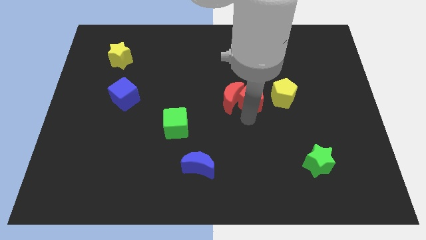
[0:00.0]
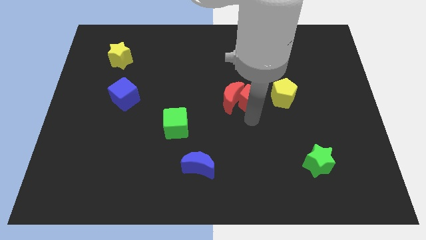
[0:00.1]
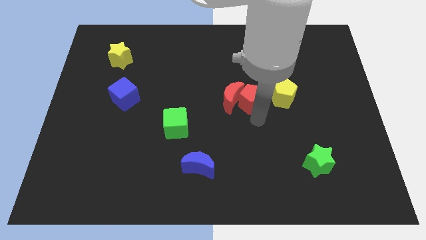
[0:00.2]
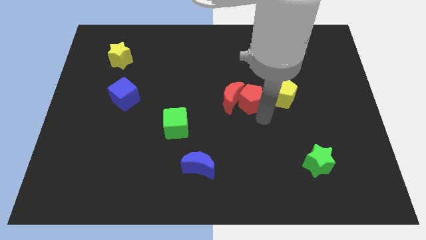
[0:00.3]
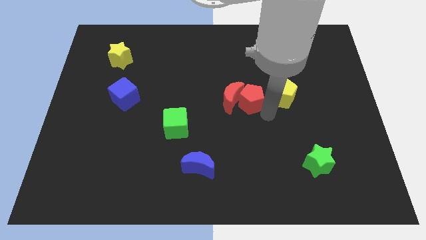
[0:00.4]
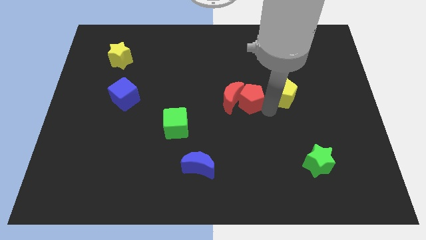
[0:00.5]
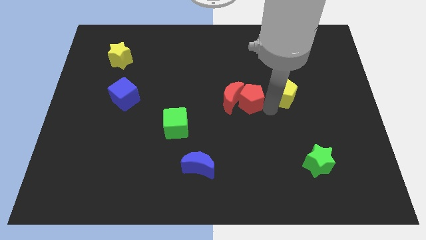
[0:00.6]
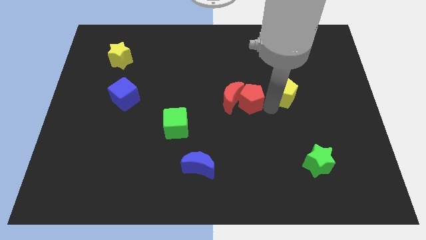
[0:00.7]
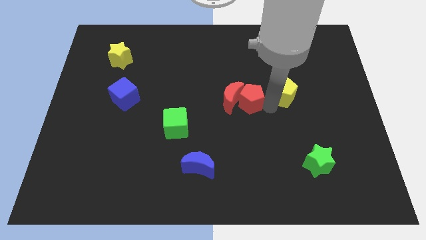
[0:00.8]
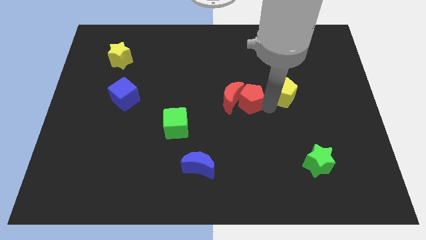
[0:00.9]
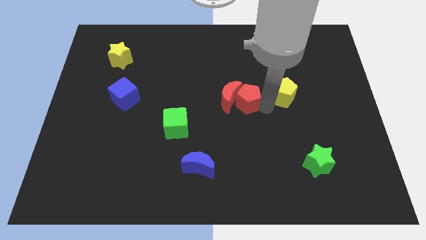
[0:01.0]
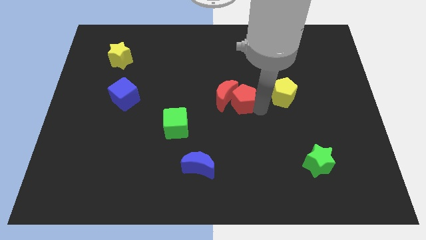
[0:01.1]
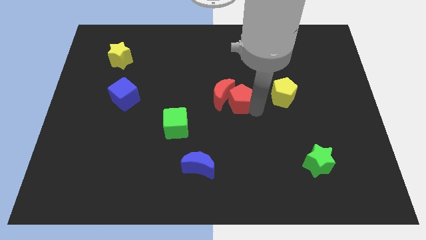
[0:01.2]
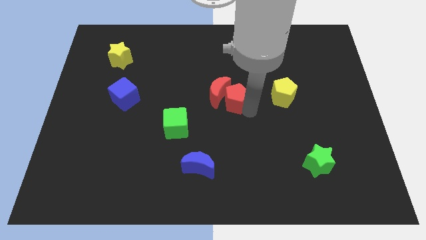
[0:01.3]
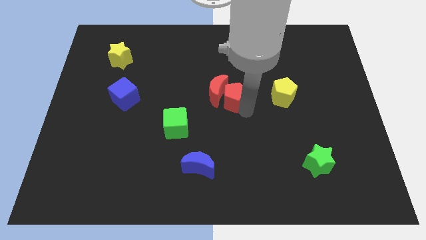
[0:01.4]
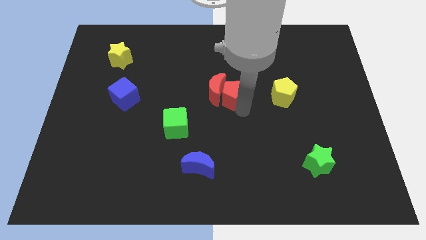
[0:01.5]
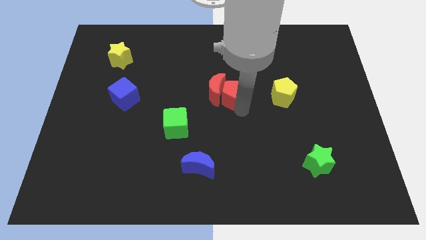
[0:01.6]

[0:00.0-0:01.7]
push red crescent with red pentagon

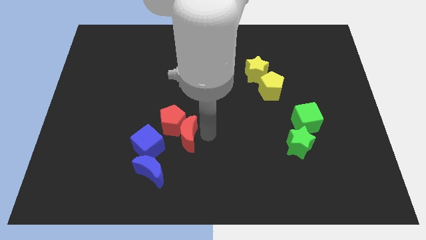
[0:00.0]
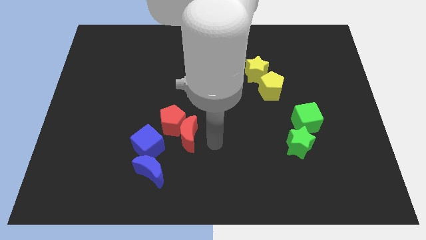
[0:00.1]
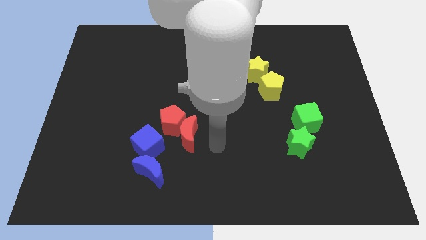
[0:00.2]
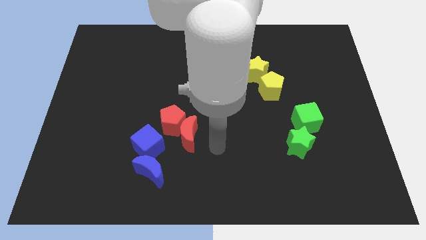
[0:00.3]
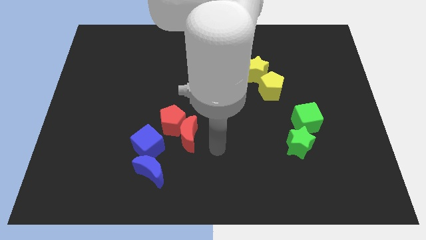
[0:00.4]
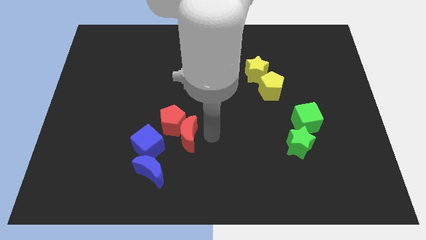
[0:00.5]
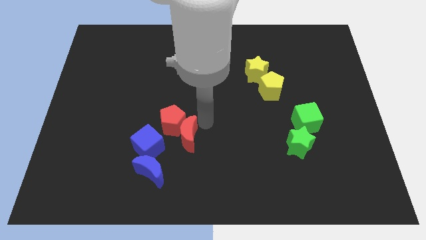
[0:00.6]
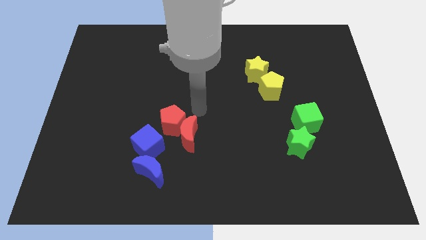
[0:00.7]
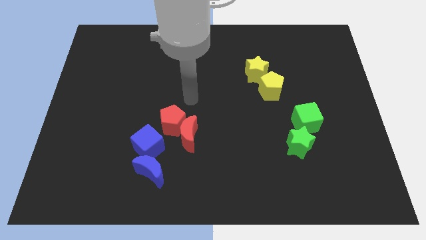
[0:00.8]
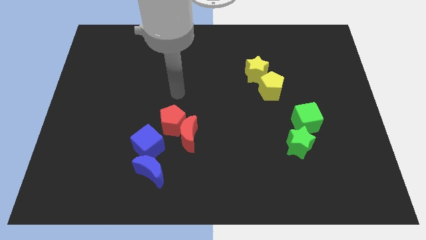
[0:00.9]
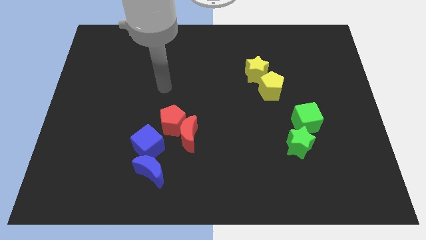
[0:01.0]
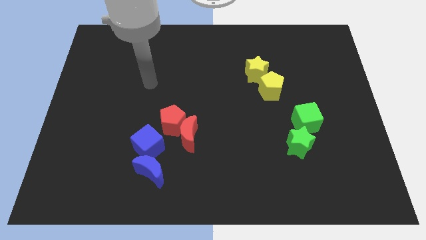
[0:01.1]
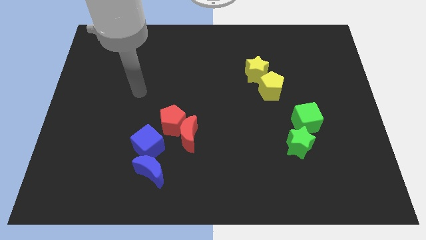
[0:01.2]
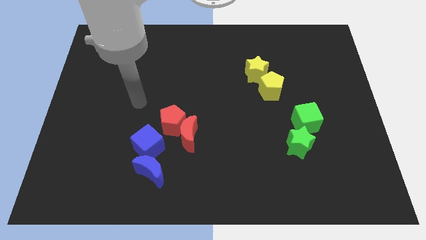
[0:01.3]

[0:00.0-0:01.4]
move your arm away from the red moon

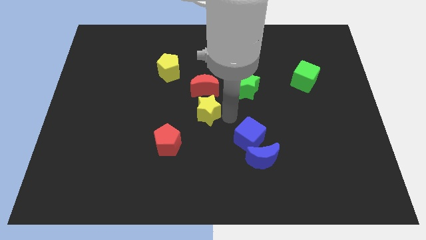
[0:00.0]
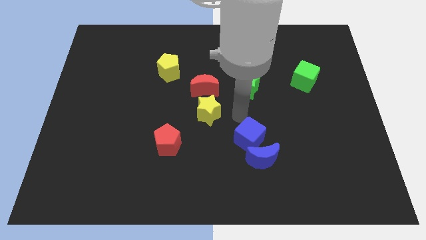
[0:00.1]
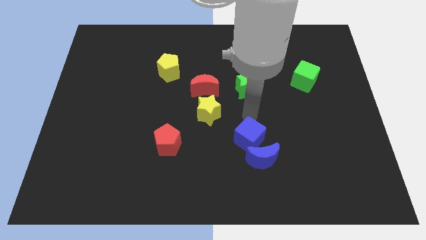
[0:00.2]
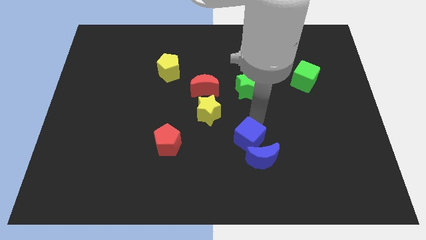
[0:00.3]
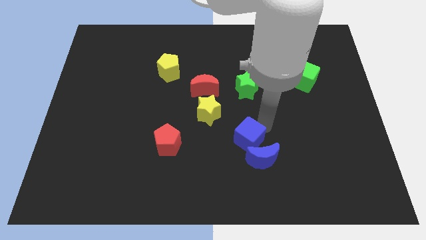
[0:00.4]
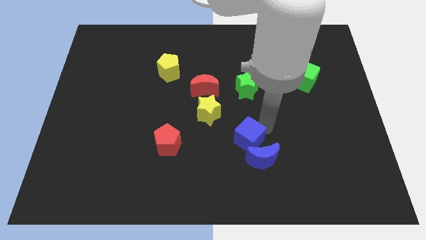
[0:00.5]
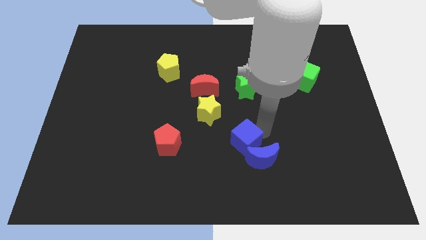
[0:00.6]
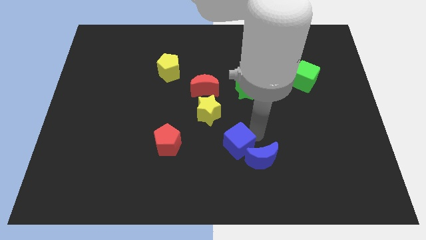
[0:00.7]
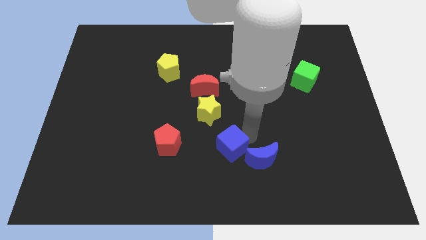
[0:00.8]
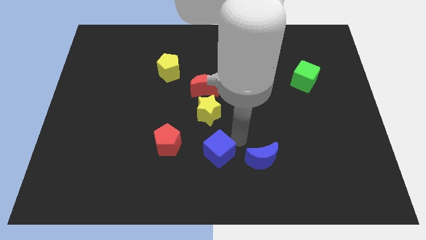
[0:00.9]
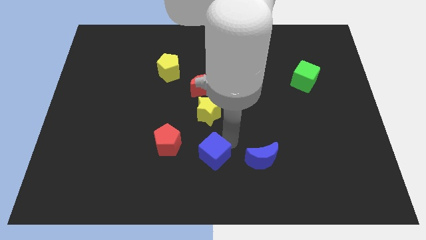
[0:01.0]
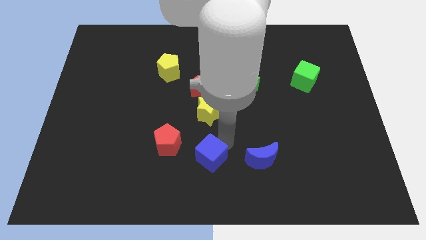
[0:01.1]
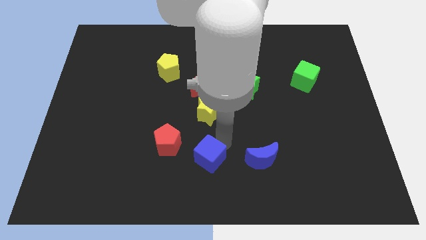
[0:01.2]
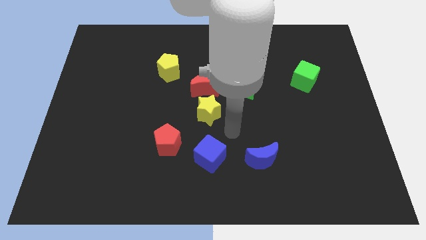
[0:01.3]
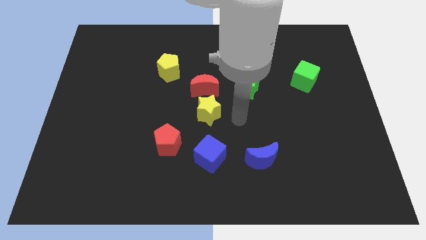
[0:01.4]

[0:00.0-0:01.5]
move the blue cube to the bottom of the yellow star

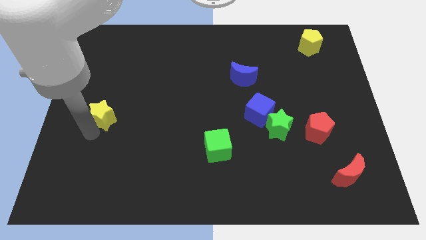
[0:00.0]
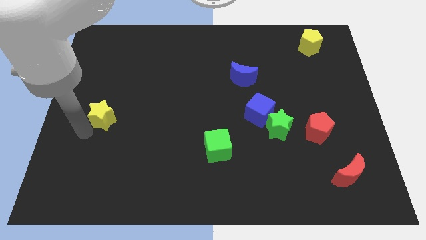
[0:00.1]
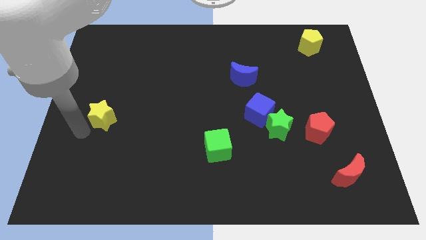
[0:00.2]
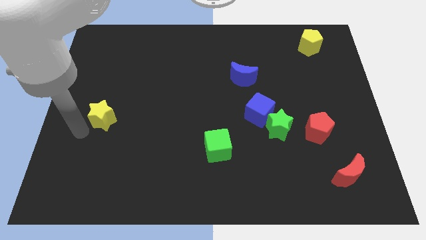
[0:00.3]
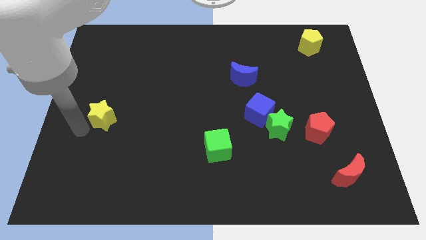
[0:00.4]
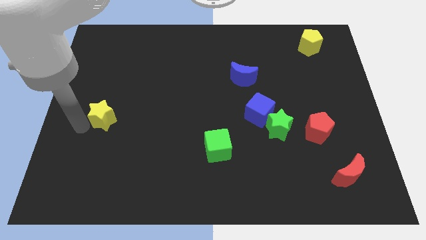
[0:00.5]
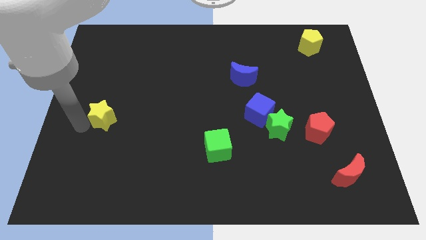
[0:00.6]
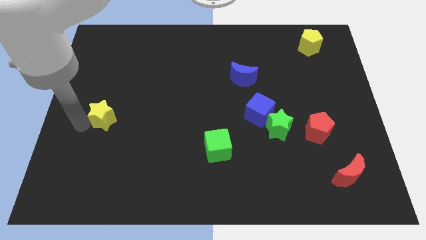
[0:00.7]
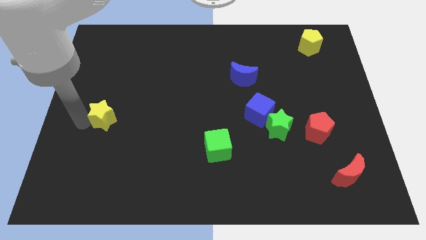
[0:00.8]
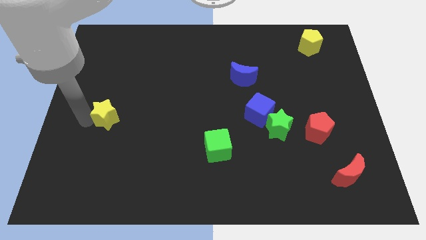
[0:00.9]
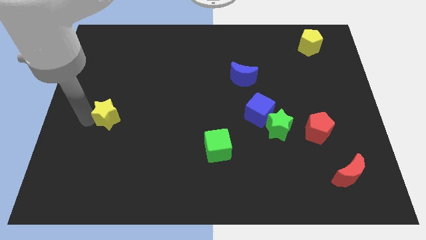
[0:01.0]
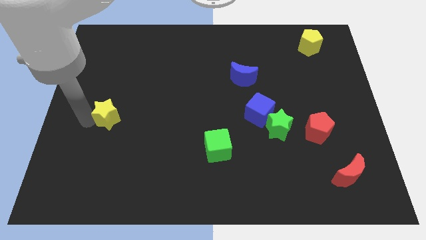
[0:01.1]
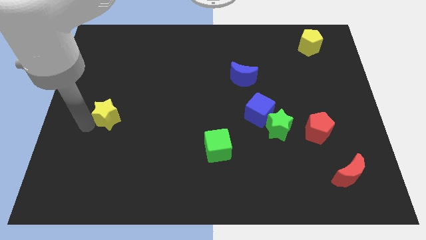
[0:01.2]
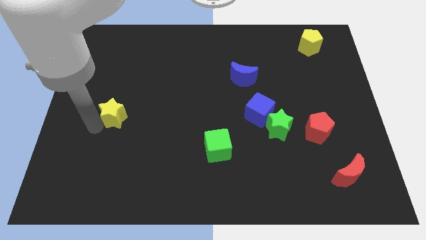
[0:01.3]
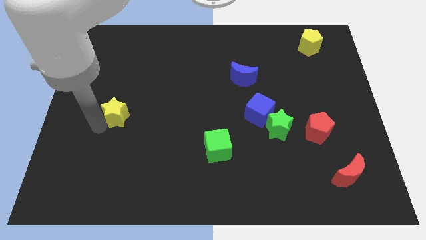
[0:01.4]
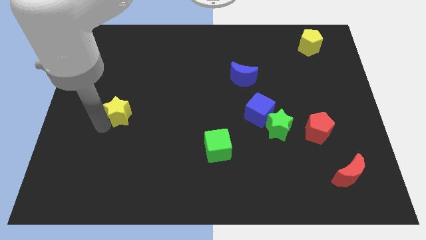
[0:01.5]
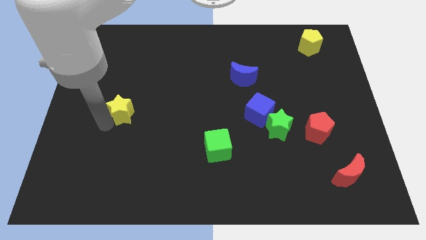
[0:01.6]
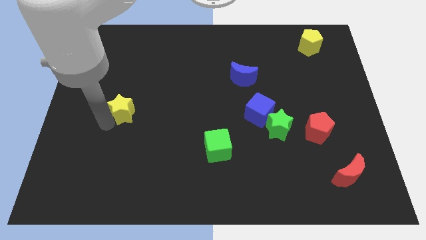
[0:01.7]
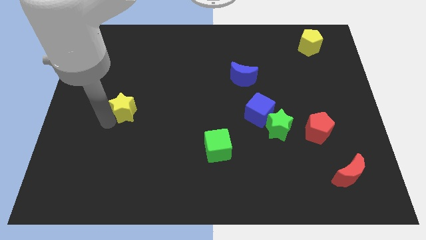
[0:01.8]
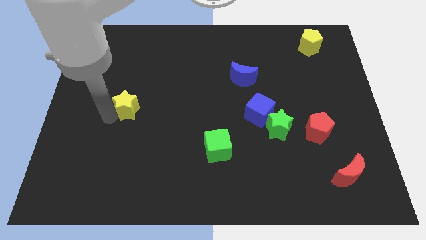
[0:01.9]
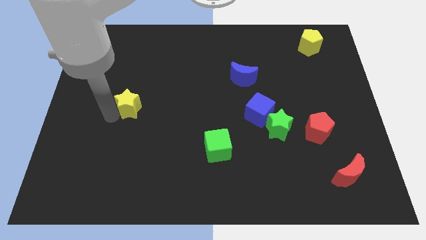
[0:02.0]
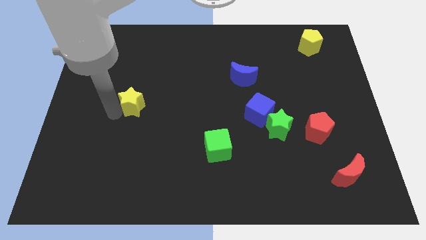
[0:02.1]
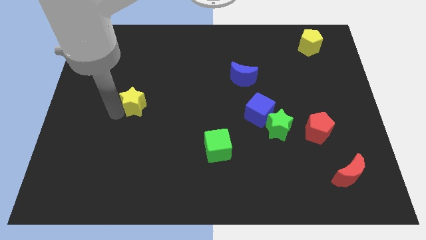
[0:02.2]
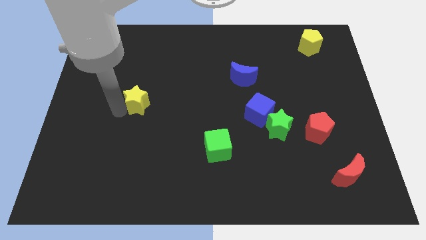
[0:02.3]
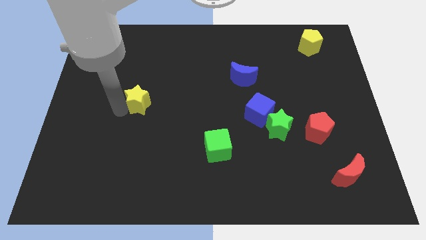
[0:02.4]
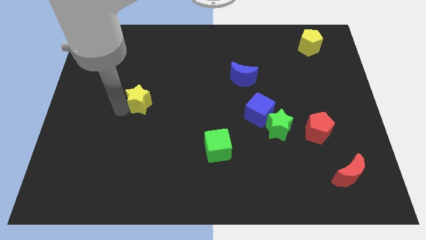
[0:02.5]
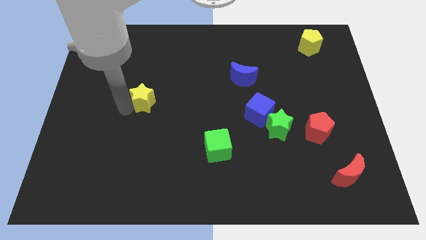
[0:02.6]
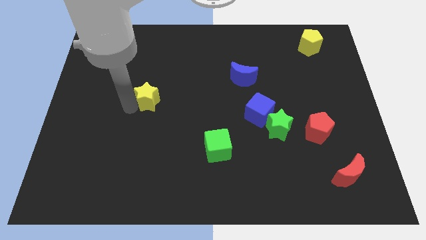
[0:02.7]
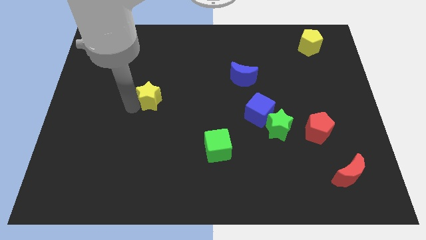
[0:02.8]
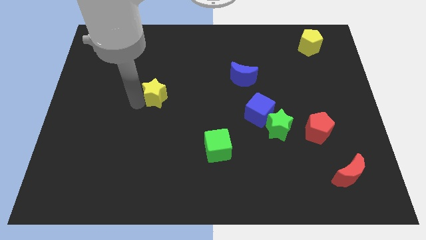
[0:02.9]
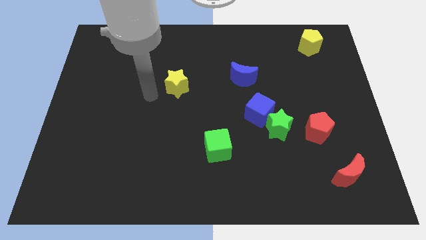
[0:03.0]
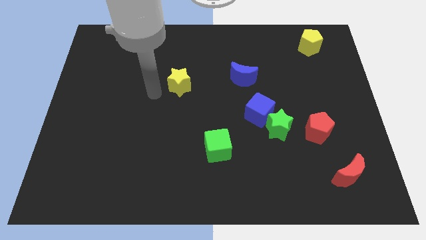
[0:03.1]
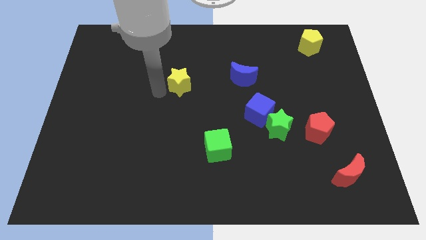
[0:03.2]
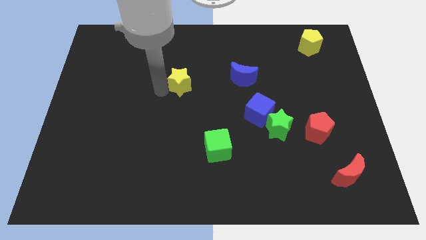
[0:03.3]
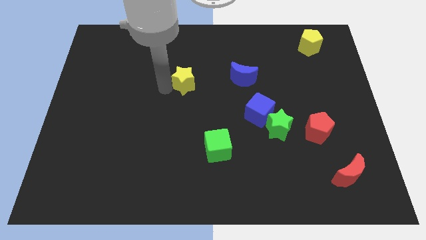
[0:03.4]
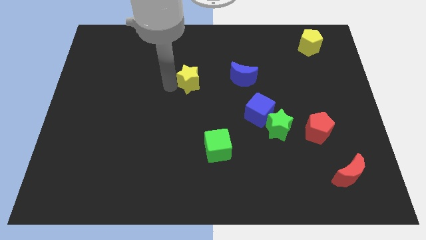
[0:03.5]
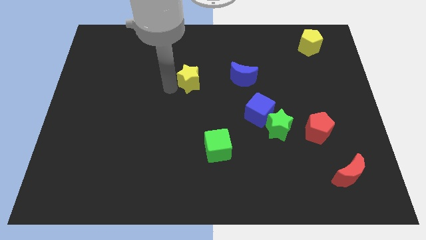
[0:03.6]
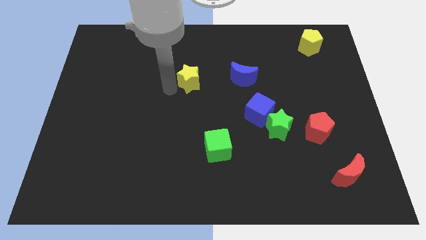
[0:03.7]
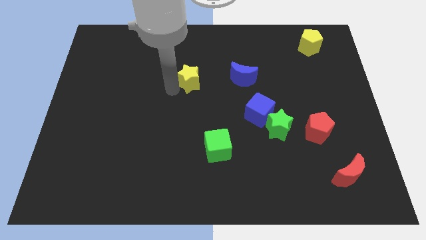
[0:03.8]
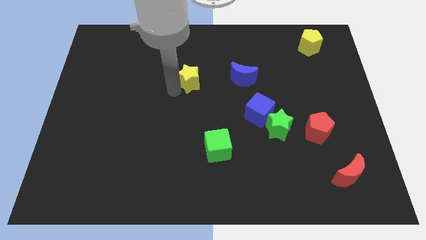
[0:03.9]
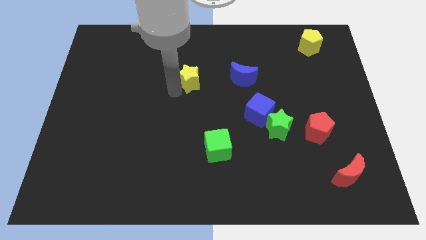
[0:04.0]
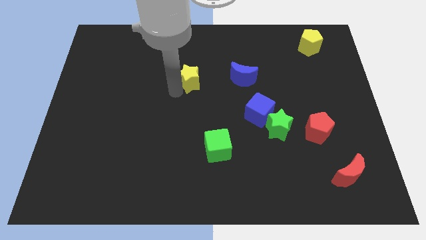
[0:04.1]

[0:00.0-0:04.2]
put the yellow star left to the blue moon
